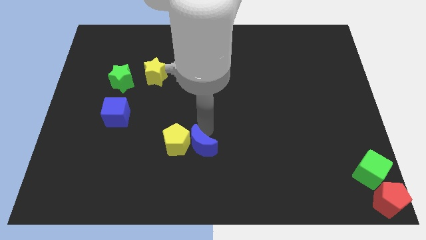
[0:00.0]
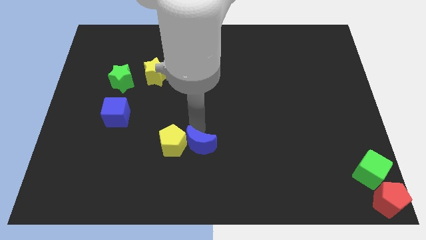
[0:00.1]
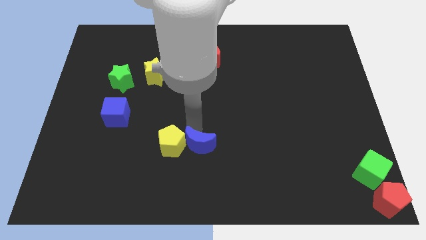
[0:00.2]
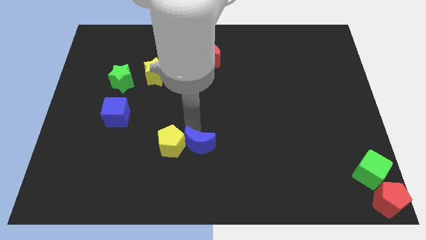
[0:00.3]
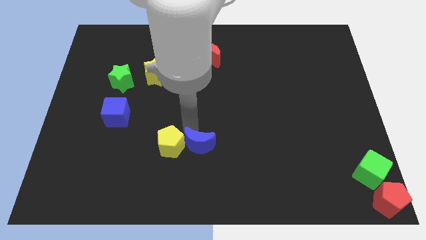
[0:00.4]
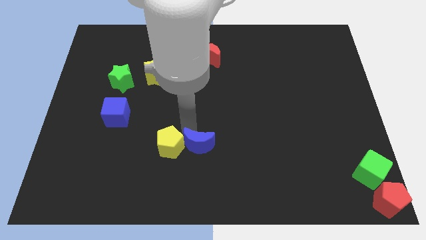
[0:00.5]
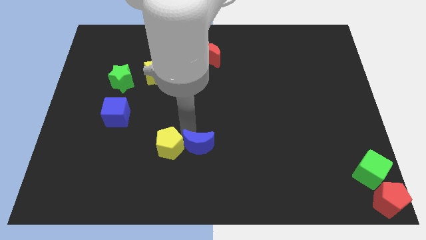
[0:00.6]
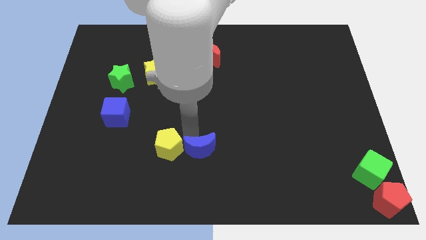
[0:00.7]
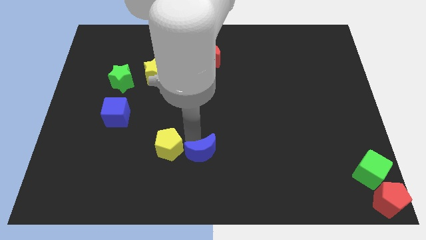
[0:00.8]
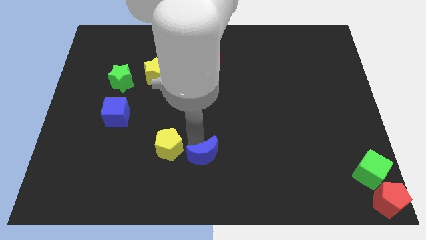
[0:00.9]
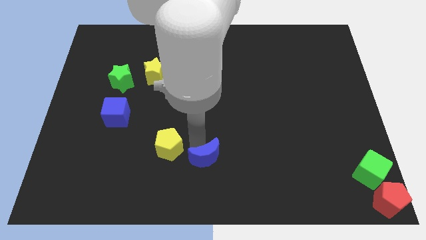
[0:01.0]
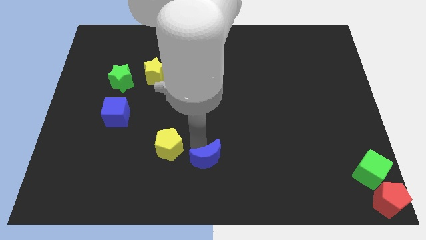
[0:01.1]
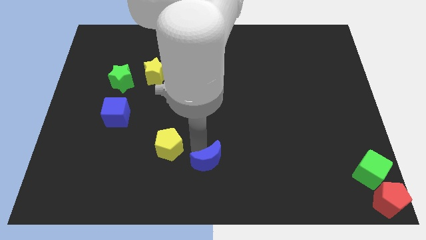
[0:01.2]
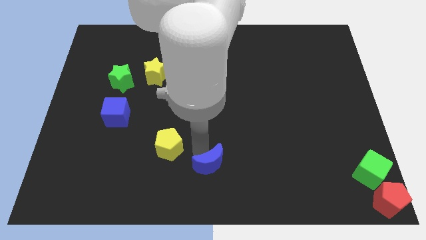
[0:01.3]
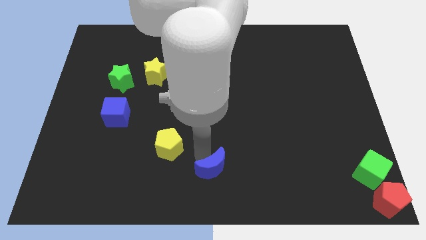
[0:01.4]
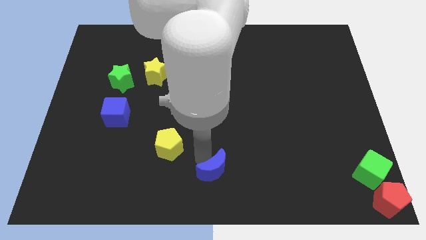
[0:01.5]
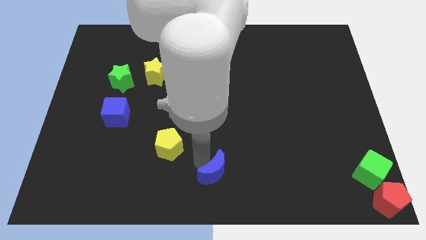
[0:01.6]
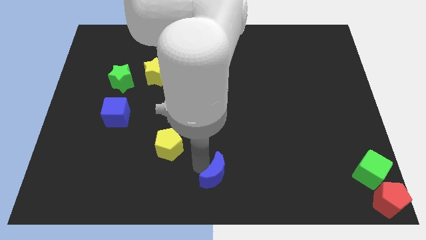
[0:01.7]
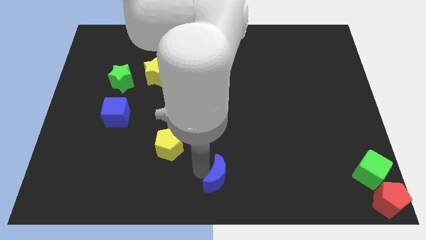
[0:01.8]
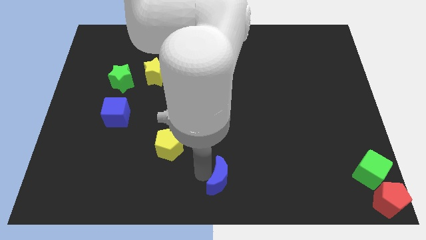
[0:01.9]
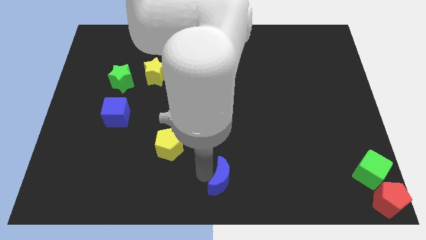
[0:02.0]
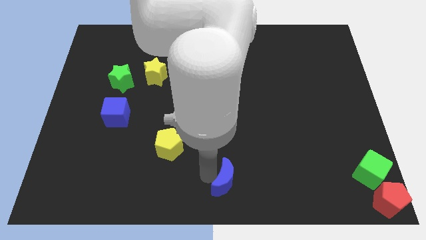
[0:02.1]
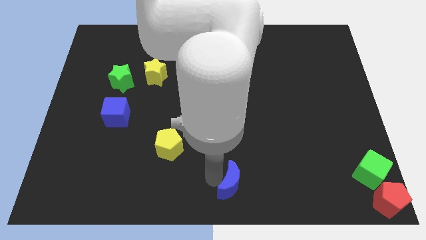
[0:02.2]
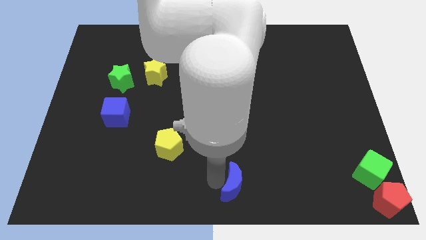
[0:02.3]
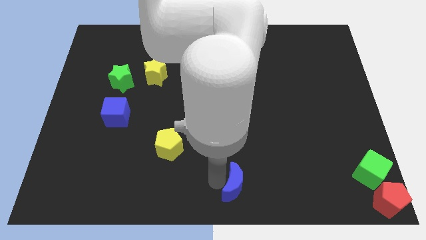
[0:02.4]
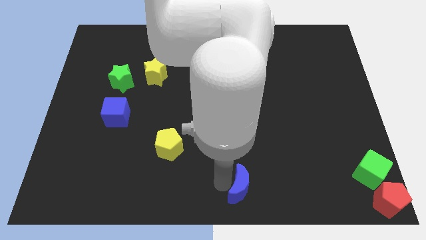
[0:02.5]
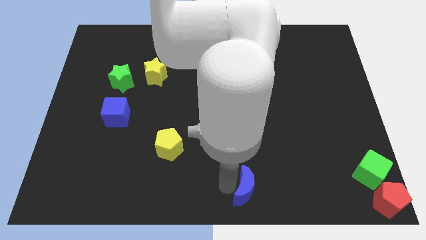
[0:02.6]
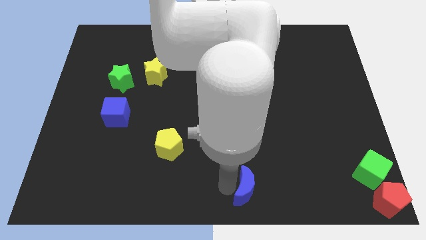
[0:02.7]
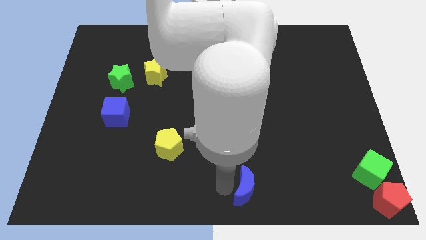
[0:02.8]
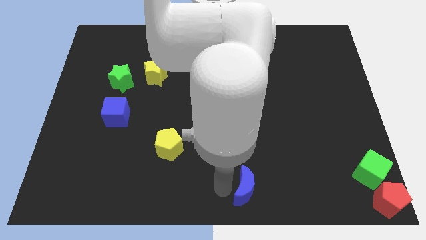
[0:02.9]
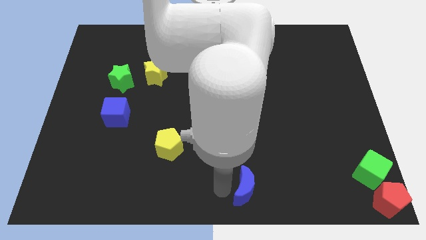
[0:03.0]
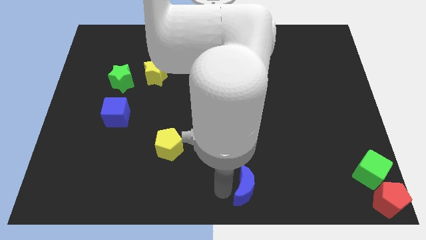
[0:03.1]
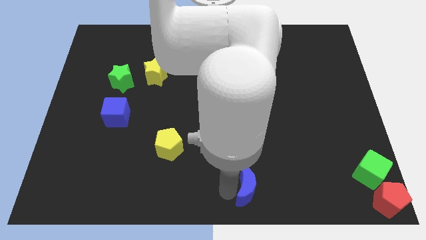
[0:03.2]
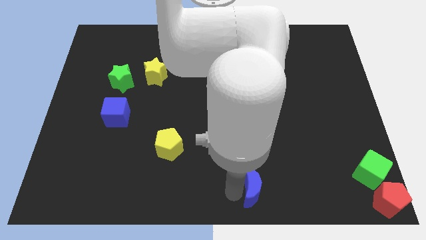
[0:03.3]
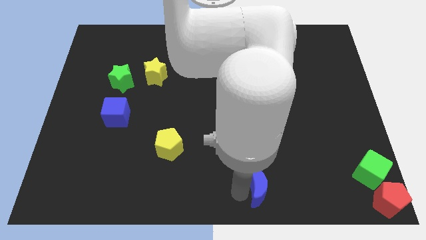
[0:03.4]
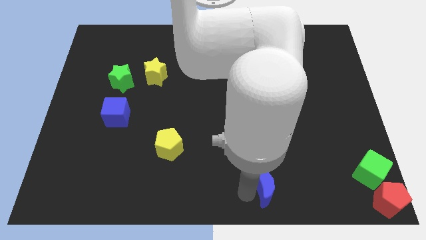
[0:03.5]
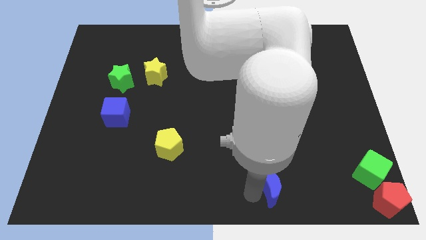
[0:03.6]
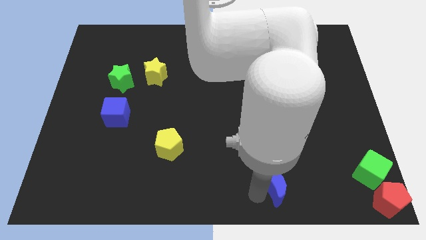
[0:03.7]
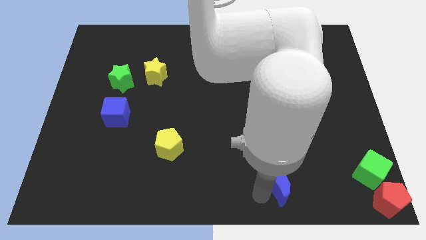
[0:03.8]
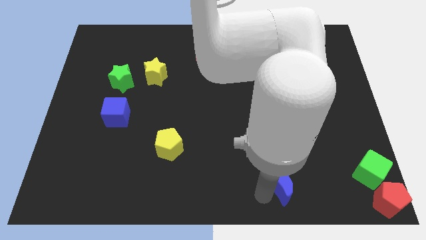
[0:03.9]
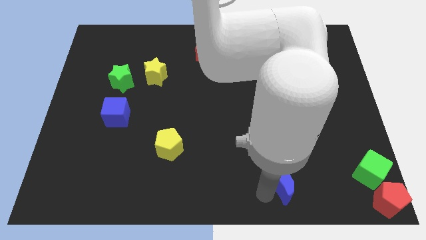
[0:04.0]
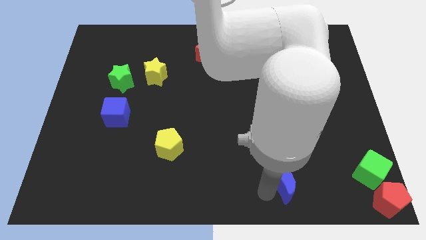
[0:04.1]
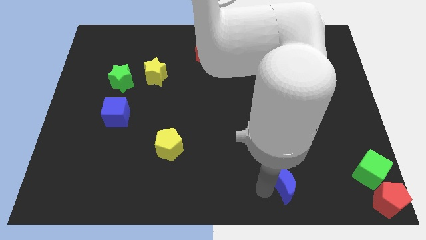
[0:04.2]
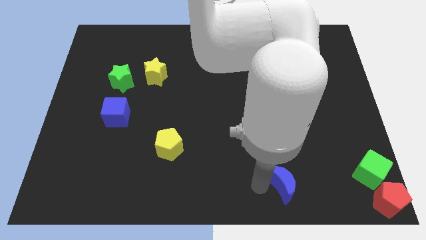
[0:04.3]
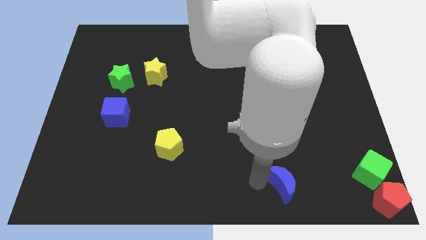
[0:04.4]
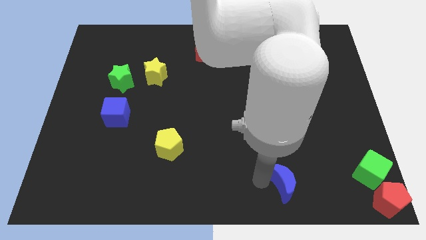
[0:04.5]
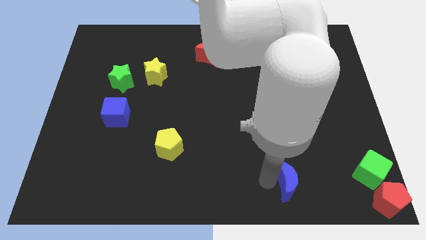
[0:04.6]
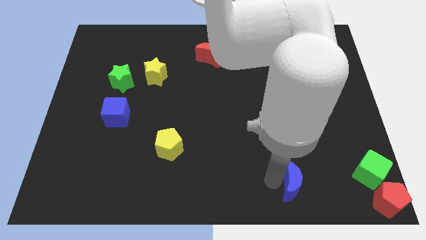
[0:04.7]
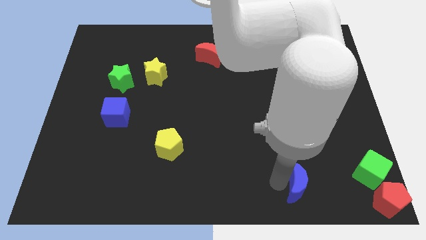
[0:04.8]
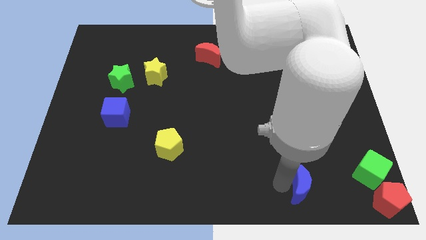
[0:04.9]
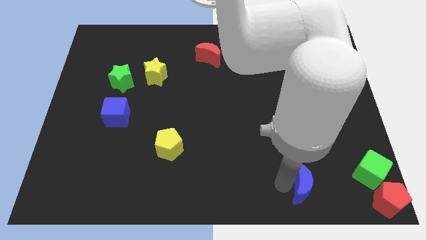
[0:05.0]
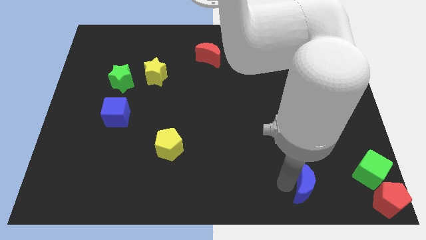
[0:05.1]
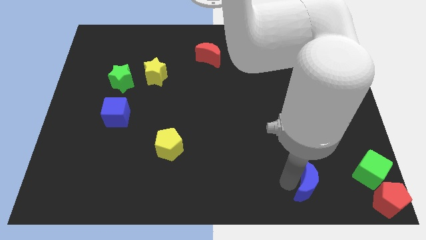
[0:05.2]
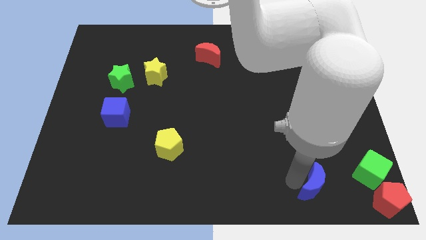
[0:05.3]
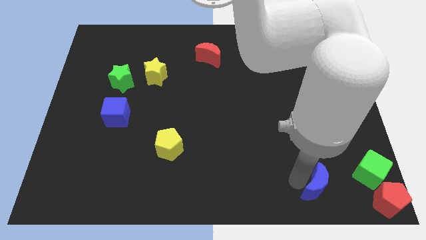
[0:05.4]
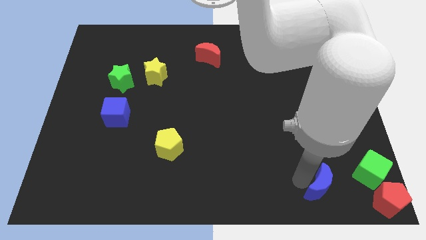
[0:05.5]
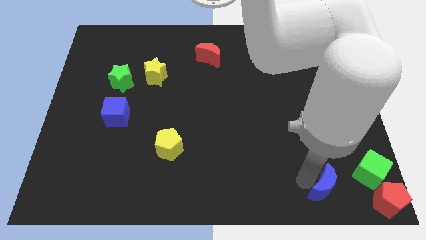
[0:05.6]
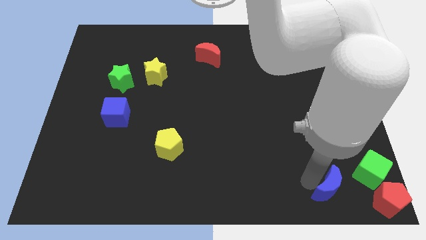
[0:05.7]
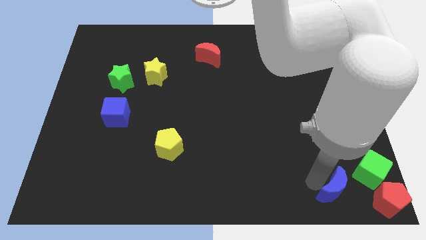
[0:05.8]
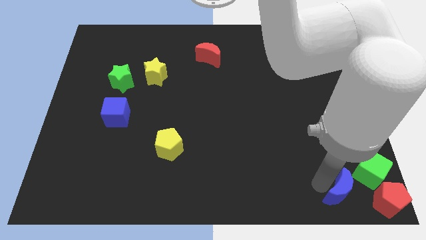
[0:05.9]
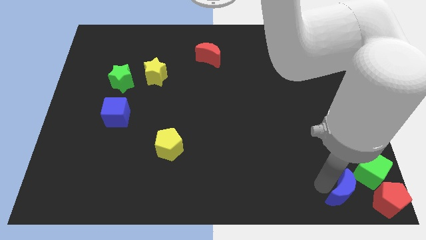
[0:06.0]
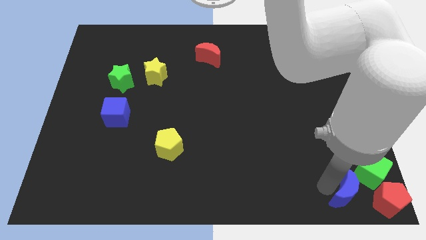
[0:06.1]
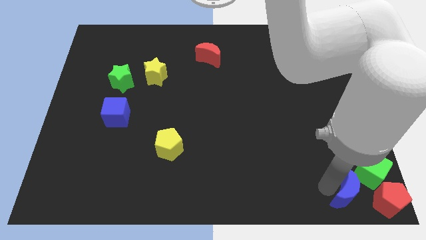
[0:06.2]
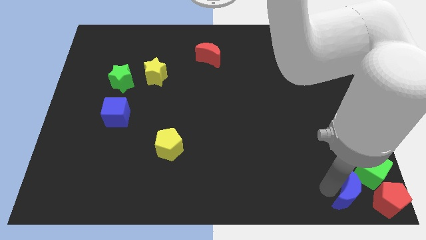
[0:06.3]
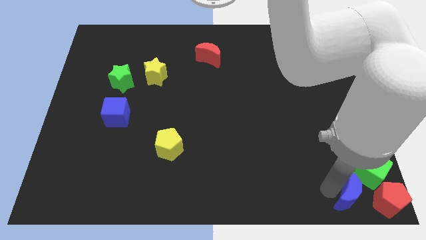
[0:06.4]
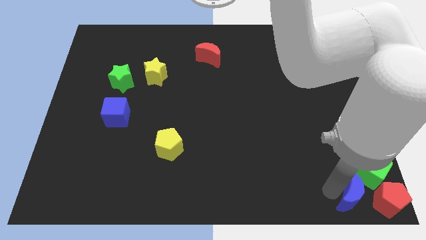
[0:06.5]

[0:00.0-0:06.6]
move the blue crescent towards the right bottom of the board

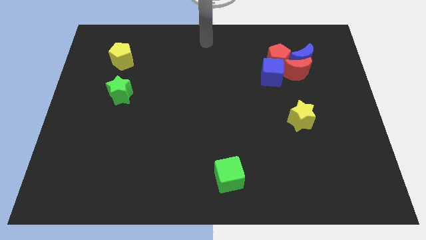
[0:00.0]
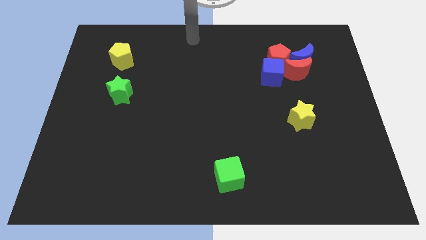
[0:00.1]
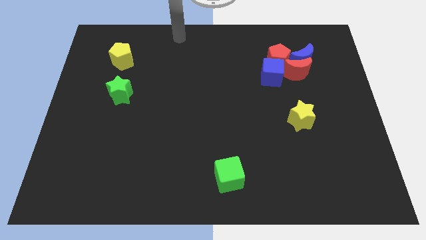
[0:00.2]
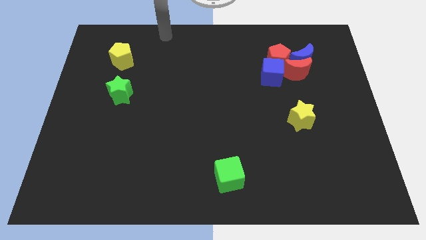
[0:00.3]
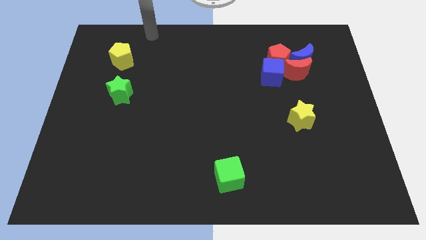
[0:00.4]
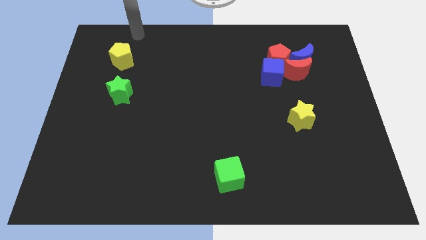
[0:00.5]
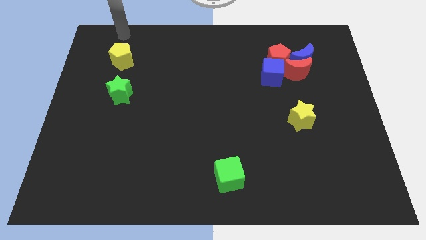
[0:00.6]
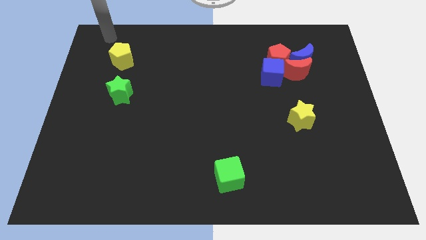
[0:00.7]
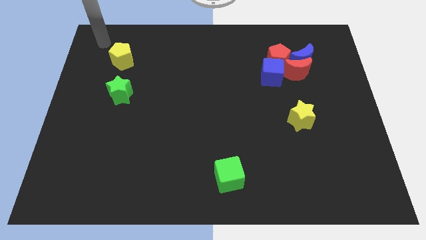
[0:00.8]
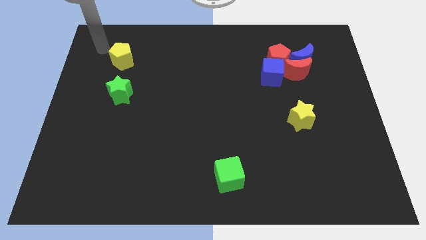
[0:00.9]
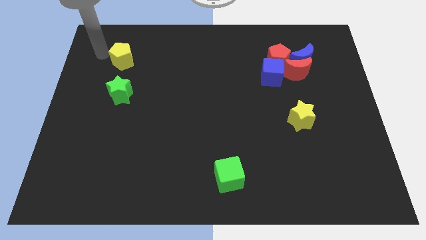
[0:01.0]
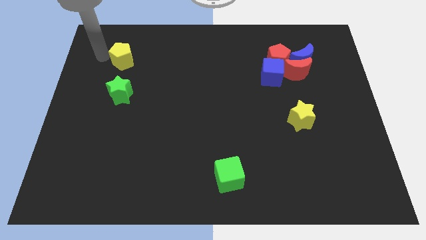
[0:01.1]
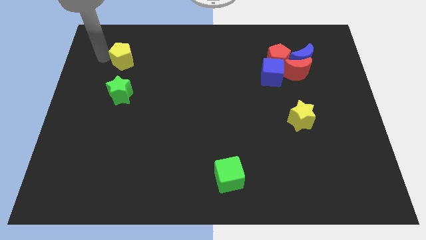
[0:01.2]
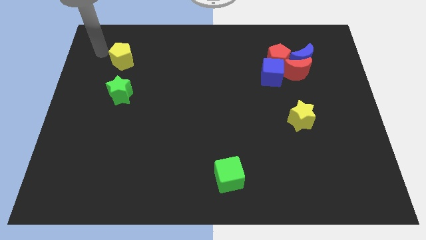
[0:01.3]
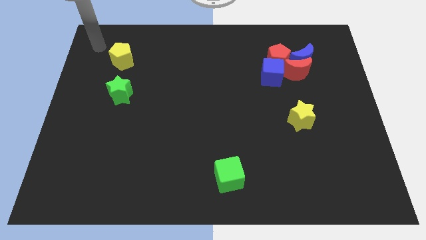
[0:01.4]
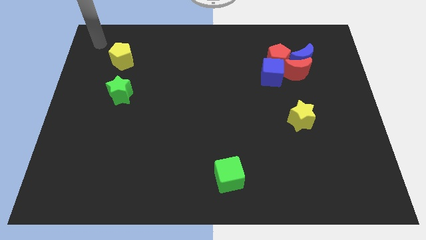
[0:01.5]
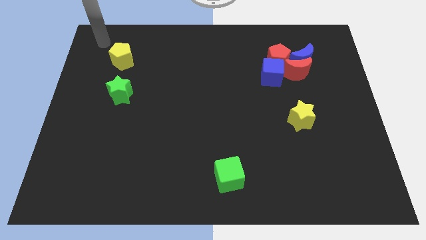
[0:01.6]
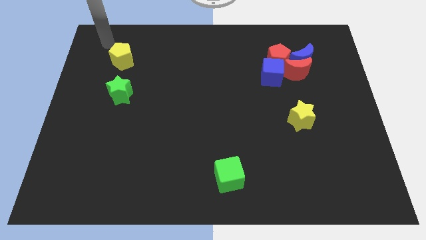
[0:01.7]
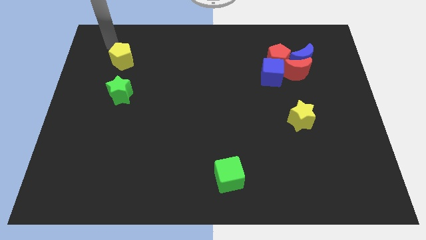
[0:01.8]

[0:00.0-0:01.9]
place the arm above the yellow pentagon

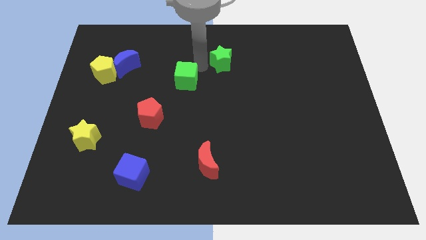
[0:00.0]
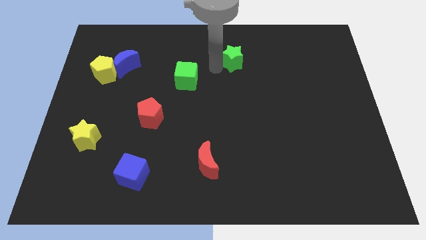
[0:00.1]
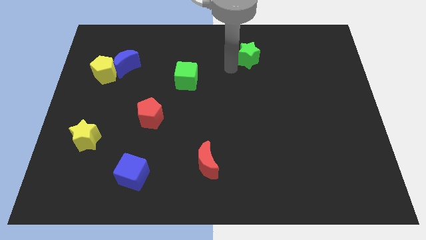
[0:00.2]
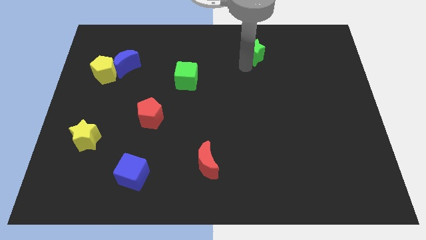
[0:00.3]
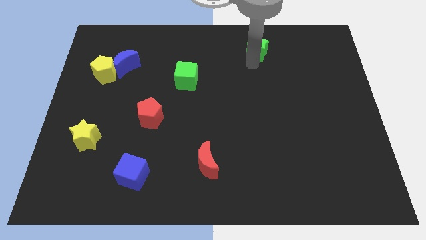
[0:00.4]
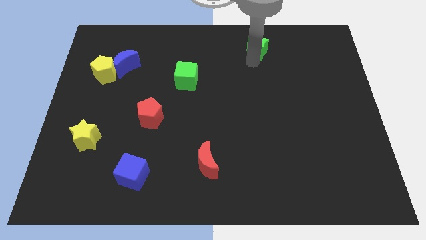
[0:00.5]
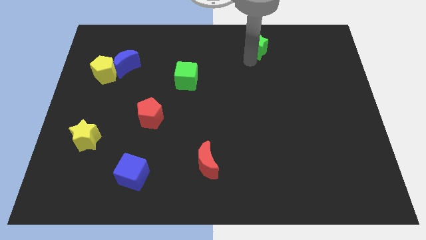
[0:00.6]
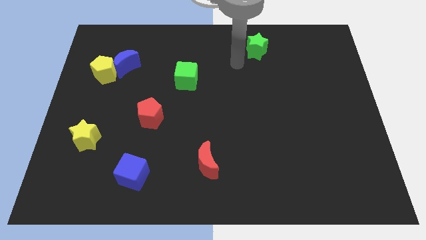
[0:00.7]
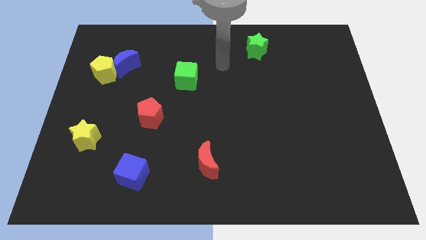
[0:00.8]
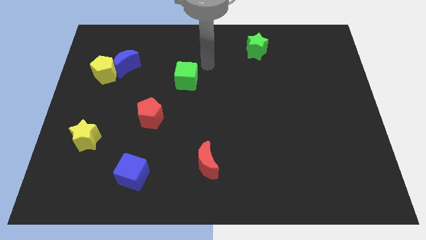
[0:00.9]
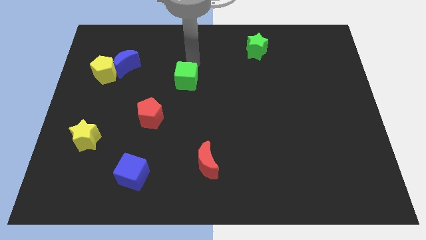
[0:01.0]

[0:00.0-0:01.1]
push the green star to the top of the board
